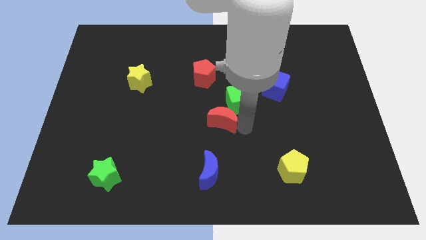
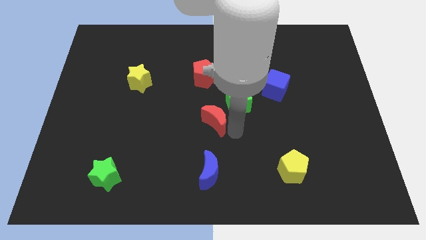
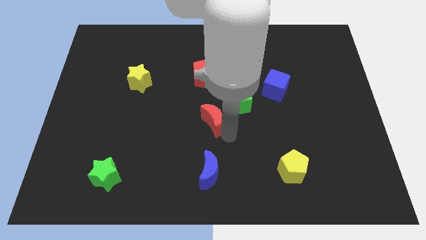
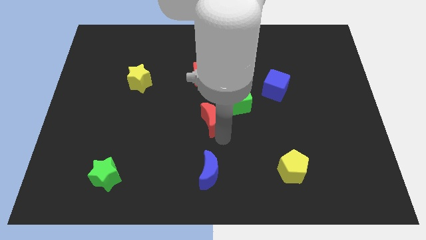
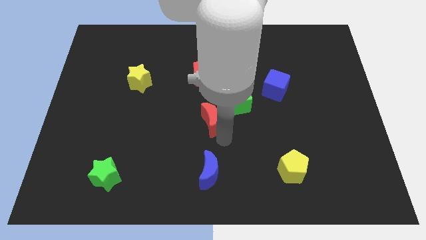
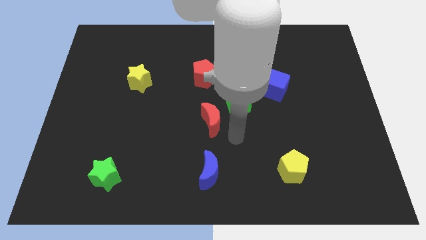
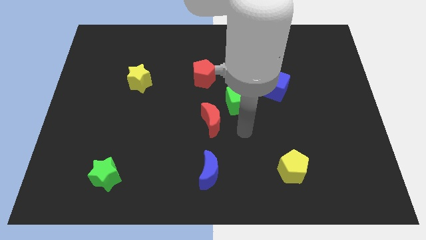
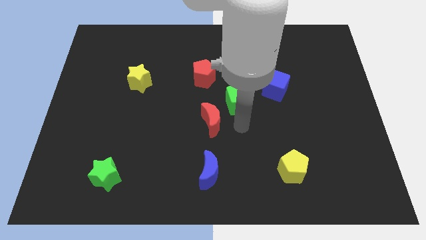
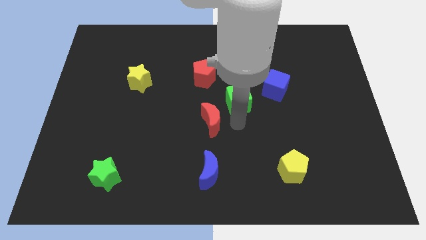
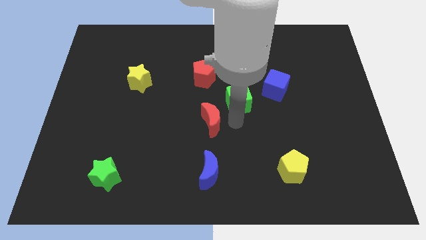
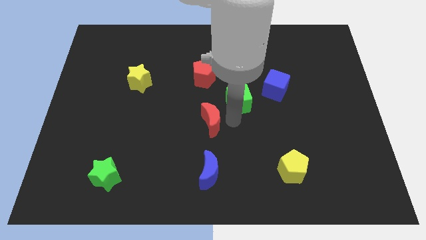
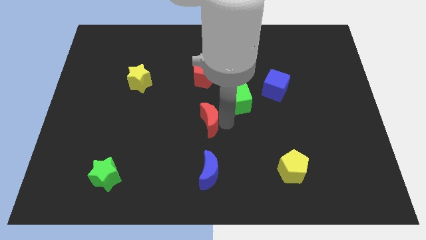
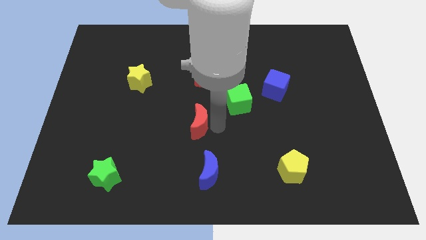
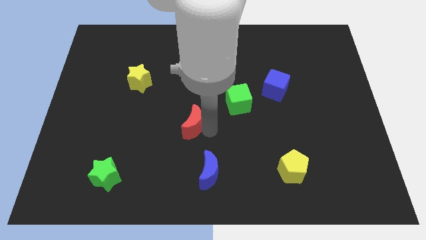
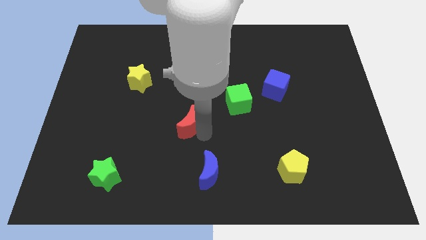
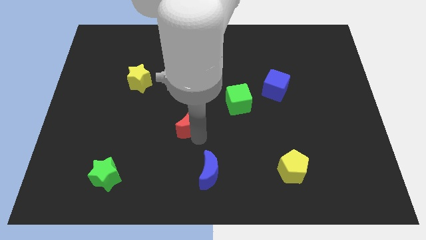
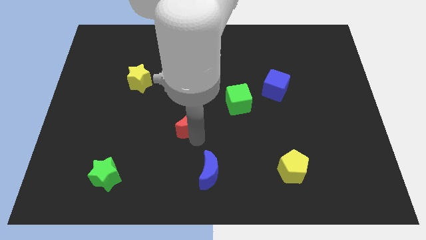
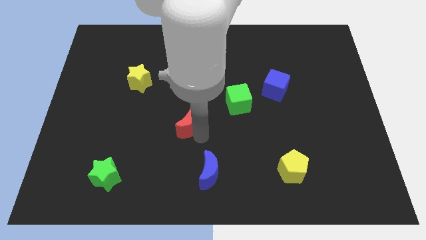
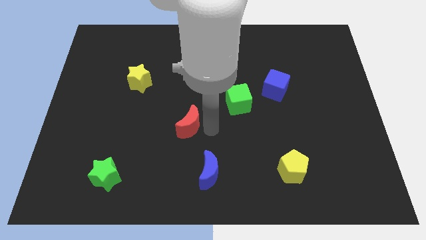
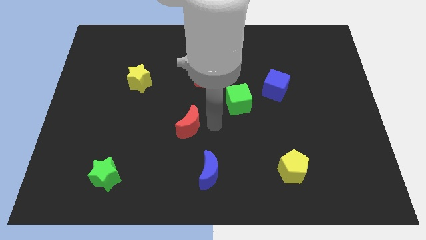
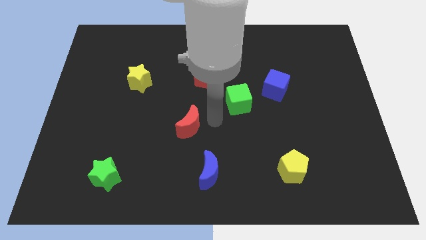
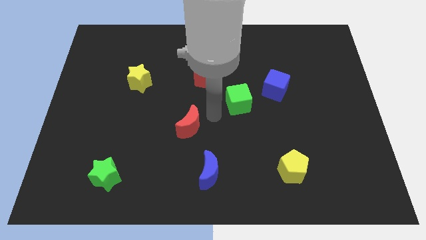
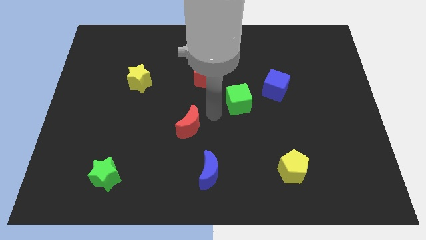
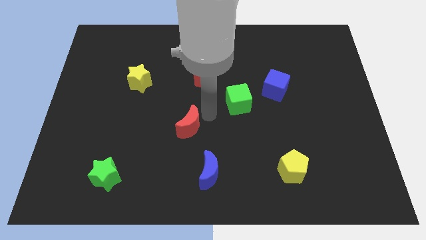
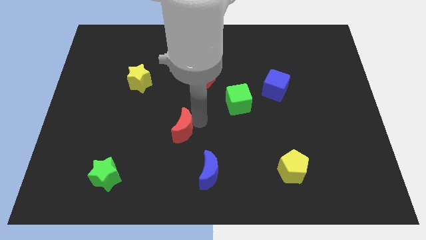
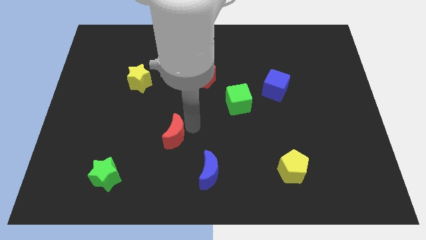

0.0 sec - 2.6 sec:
push red crescent above blue crescent

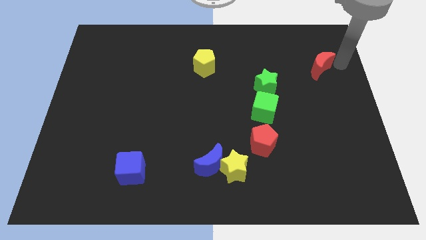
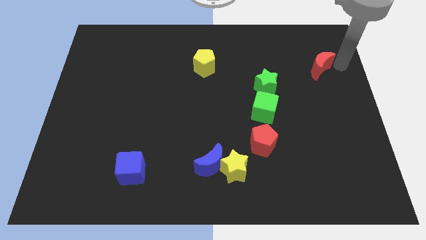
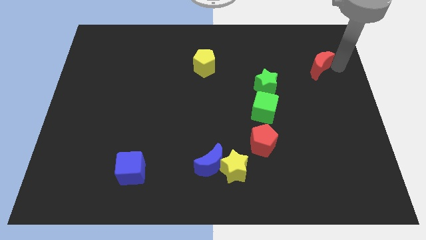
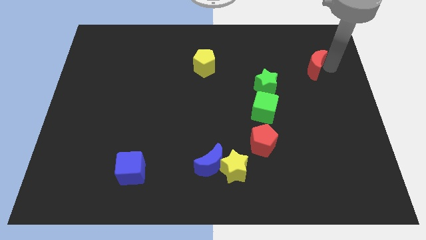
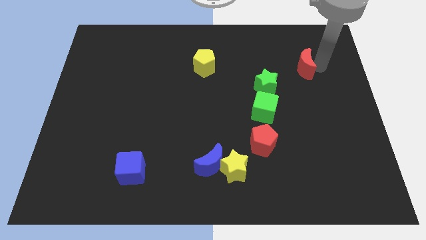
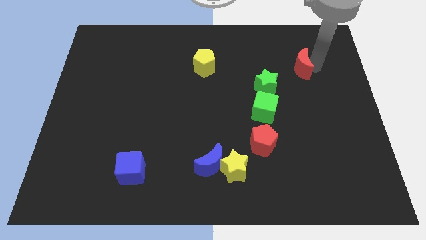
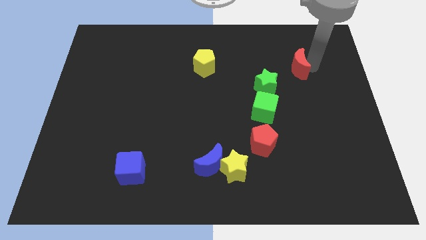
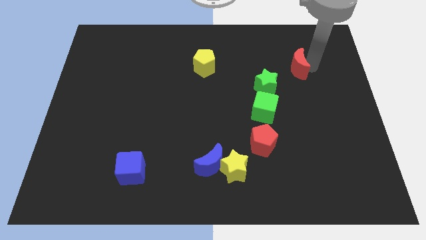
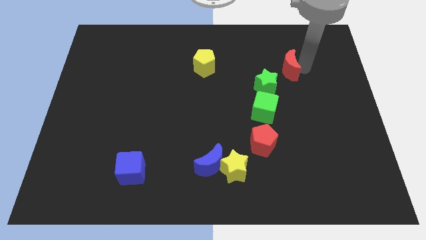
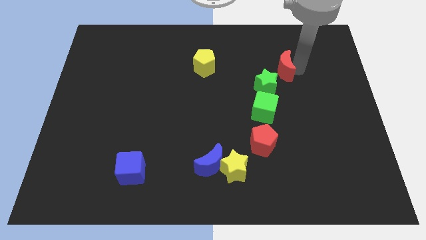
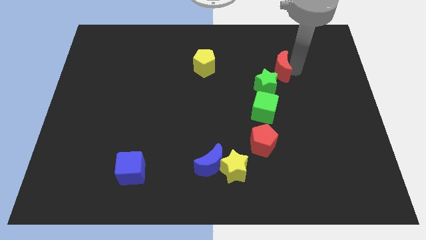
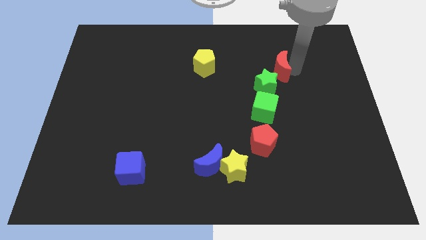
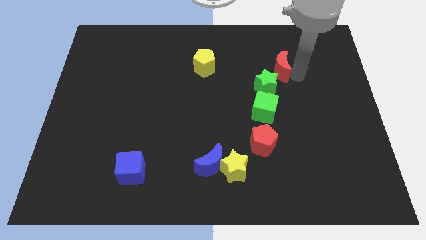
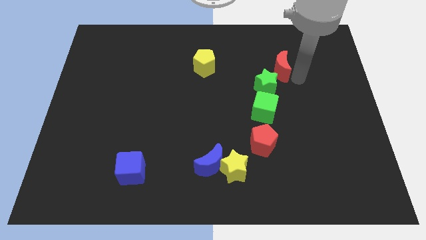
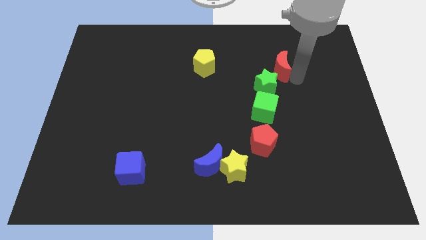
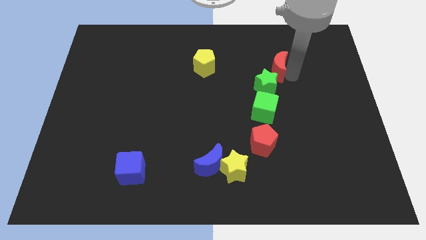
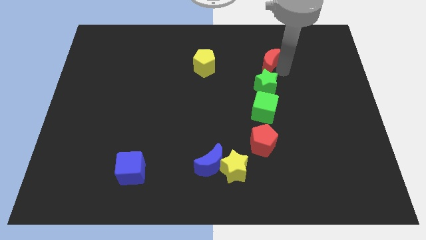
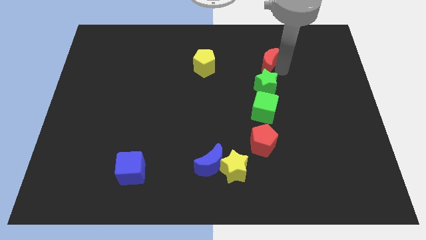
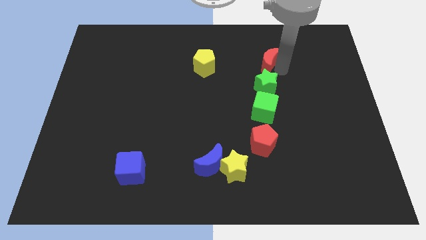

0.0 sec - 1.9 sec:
move the red crescent upwards to green star

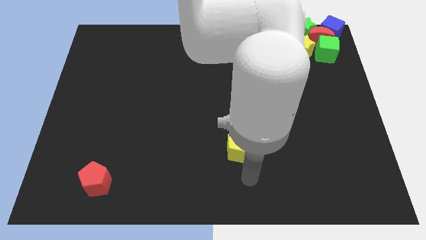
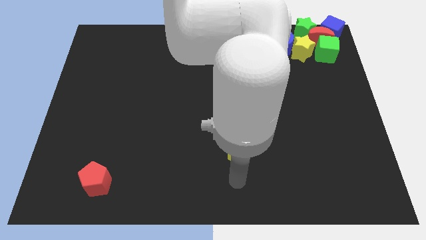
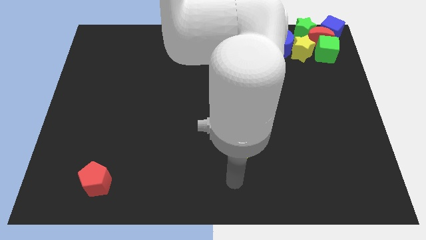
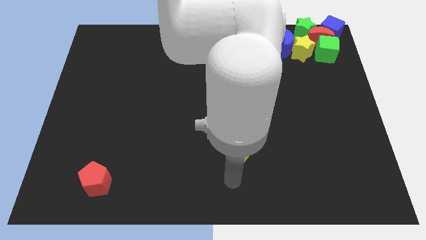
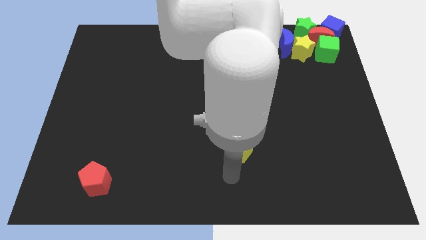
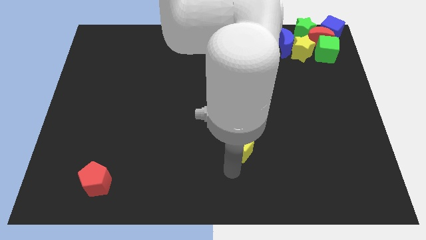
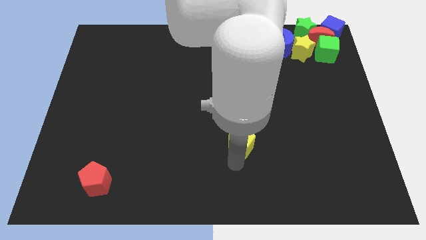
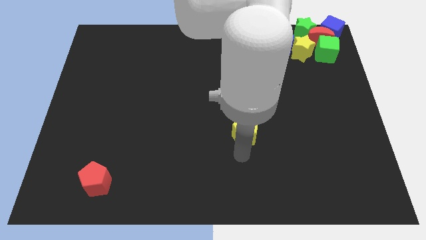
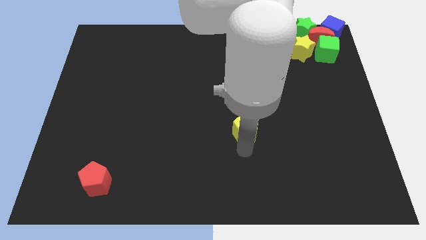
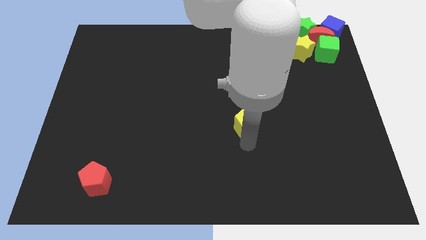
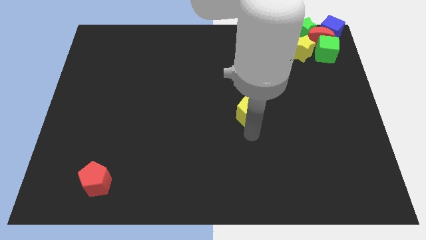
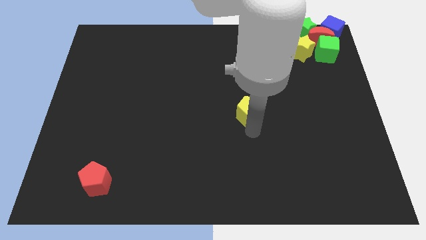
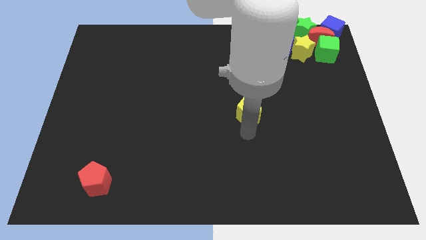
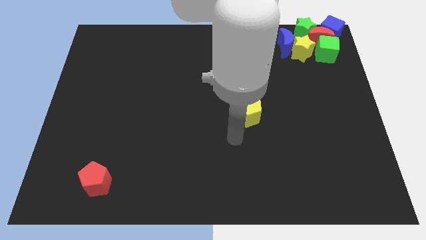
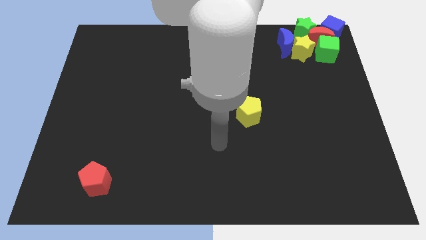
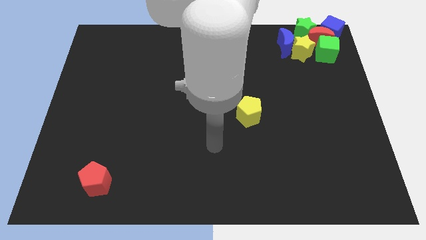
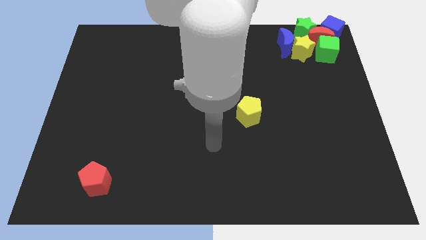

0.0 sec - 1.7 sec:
push the yellow pentagon towards the center of the board

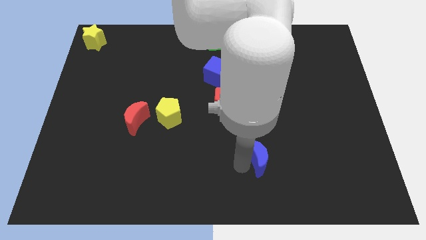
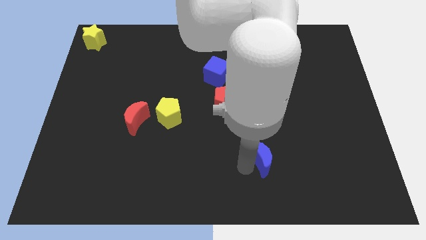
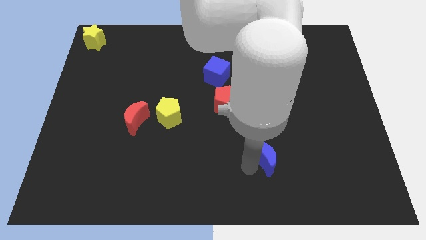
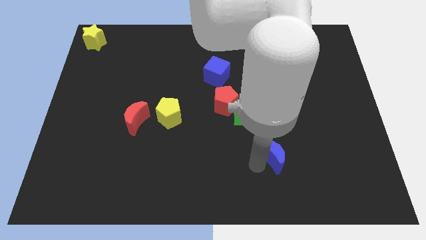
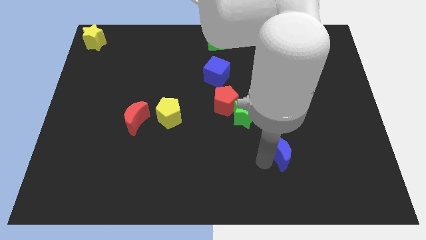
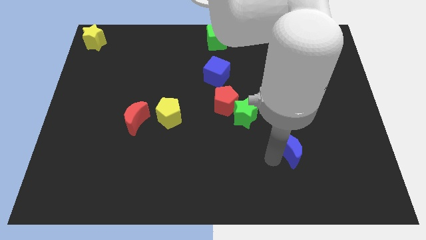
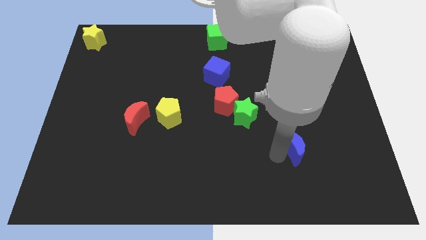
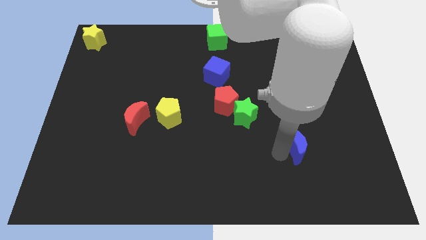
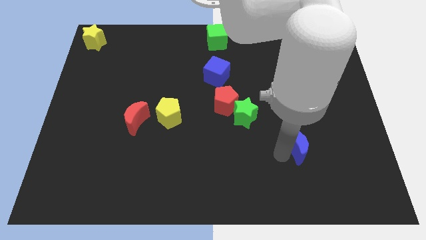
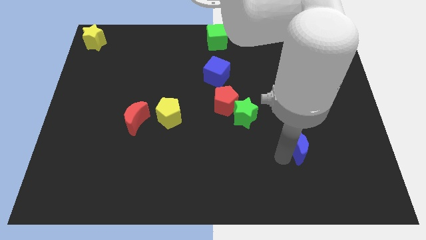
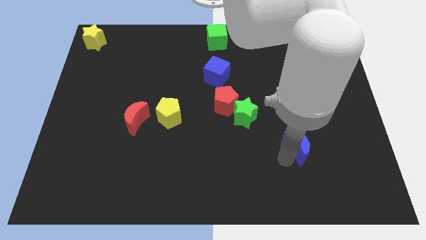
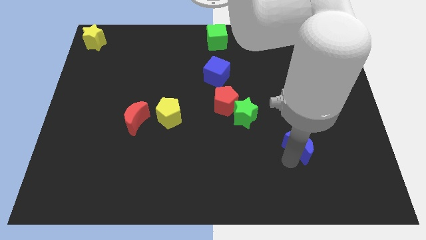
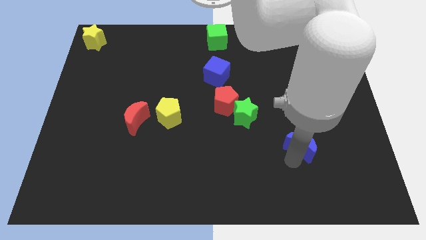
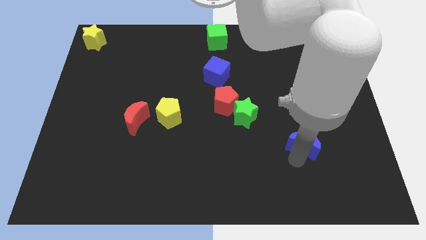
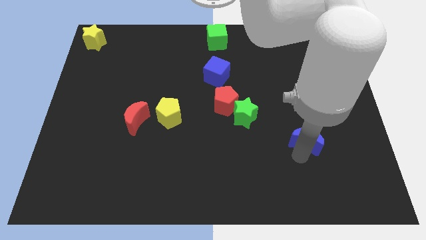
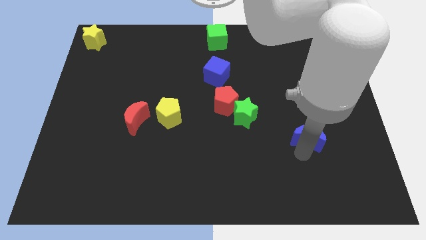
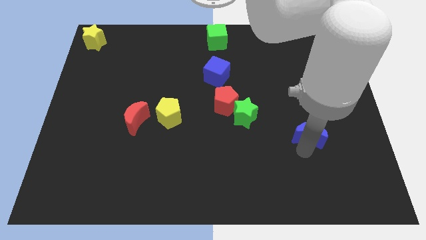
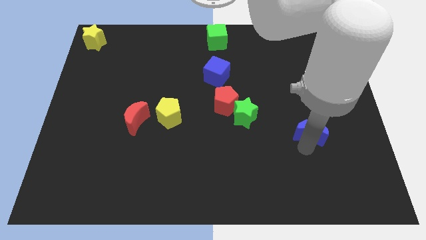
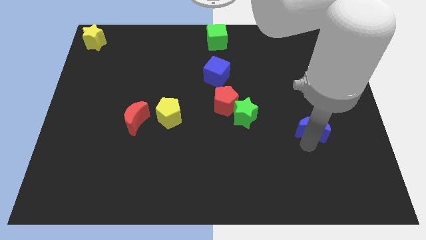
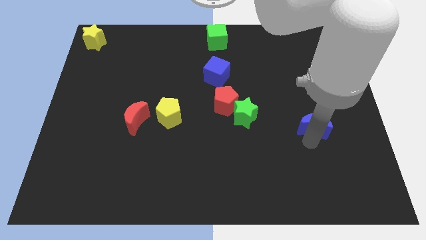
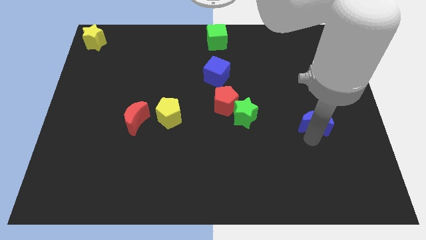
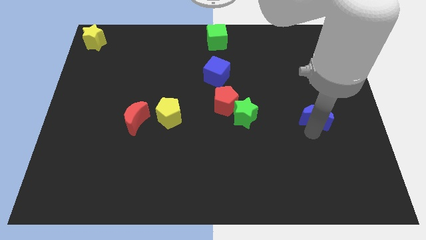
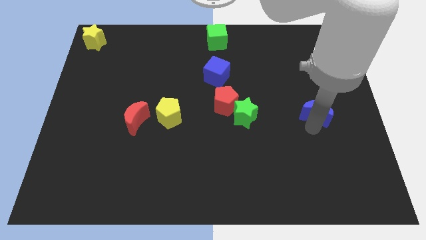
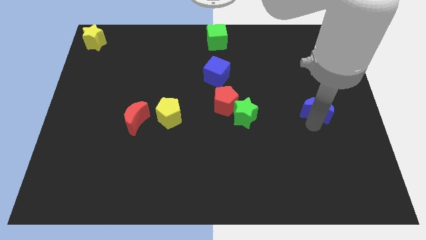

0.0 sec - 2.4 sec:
place the blue moon to the right of the green star

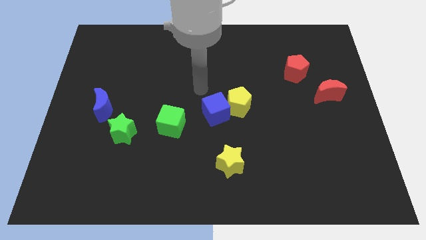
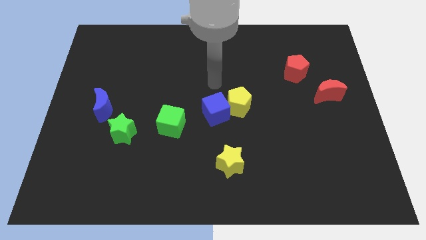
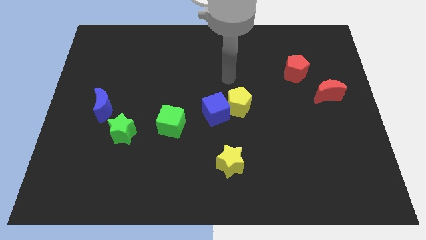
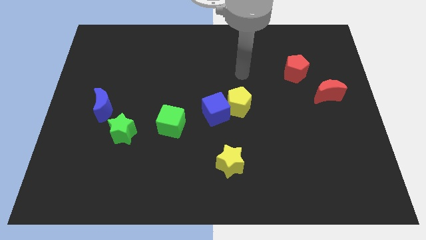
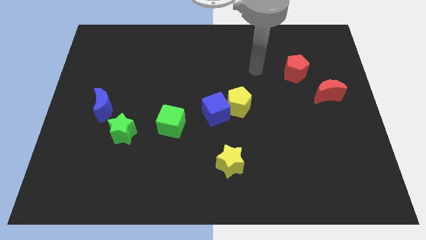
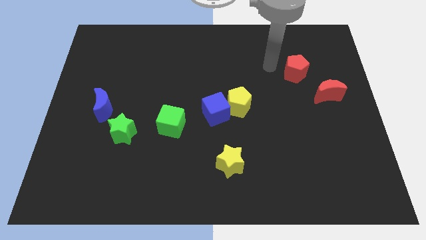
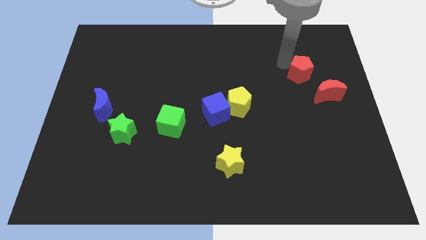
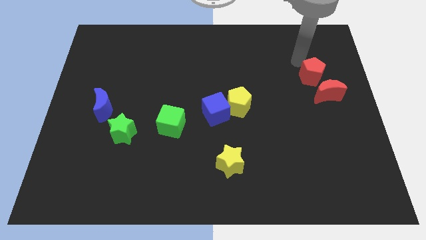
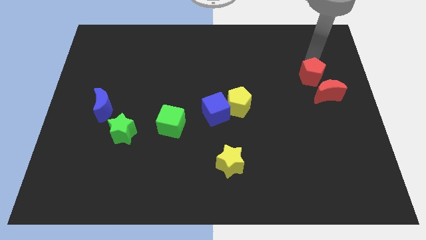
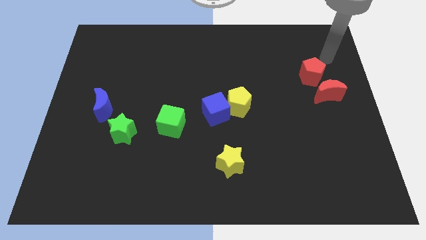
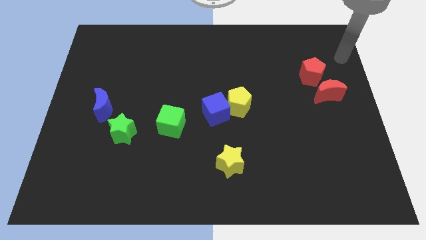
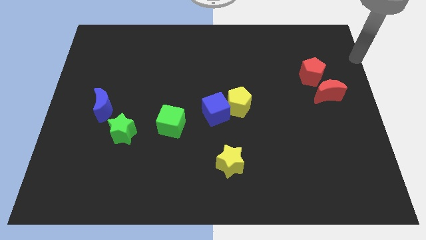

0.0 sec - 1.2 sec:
slide the red pentagon slightly to the right
